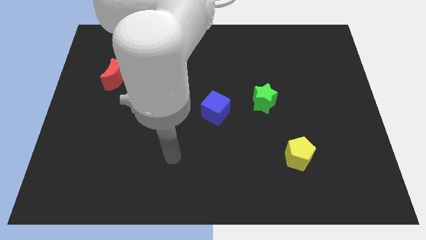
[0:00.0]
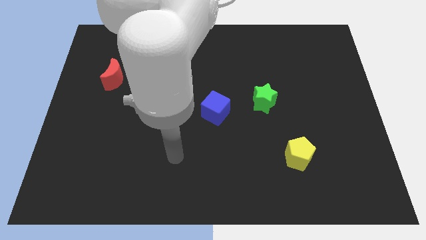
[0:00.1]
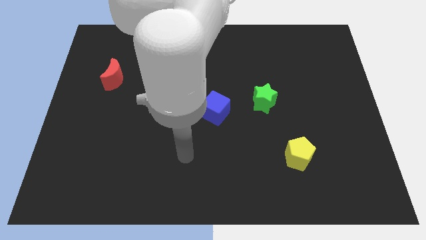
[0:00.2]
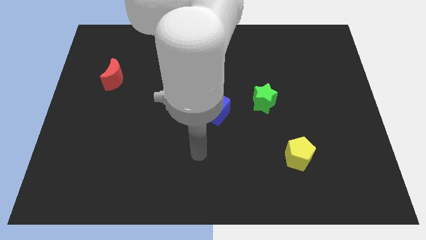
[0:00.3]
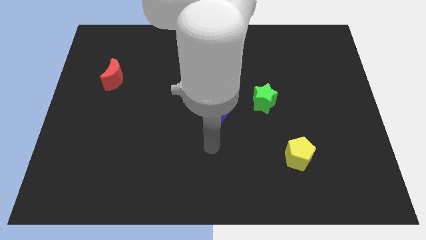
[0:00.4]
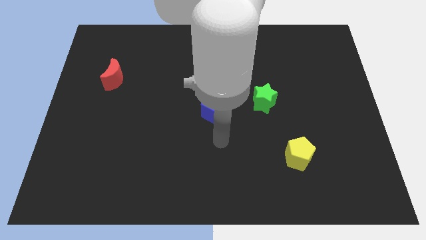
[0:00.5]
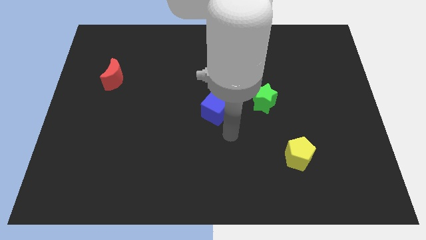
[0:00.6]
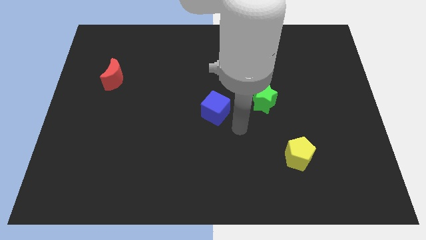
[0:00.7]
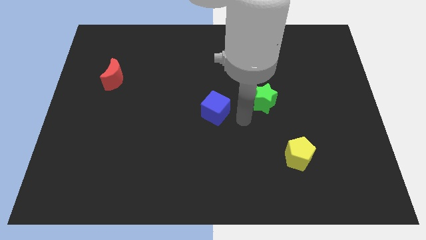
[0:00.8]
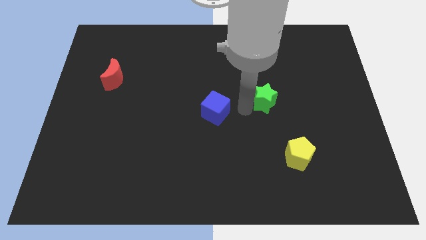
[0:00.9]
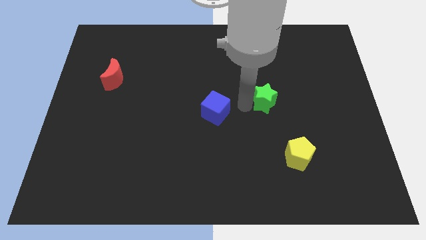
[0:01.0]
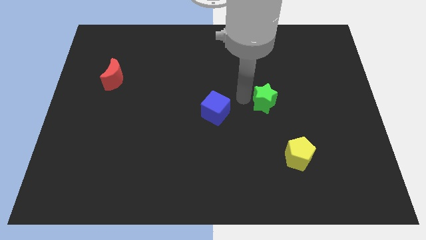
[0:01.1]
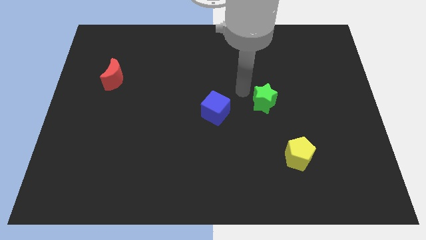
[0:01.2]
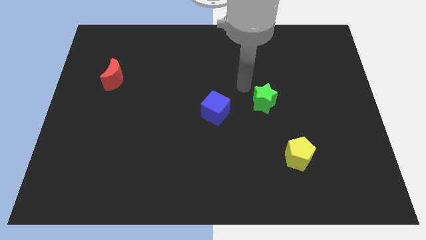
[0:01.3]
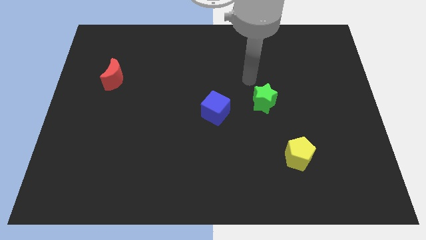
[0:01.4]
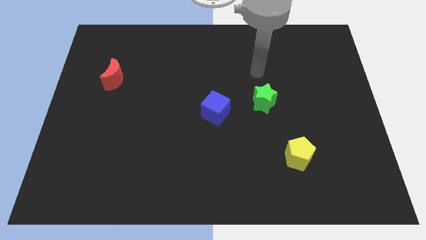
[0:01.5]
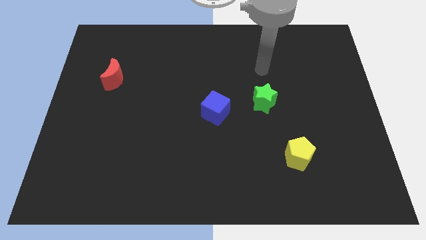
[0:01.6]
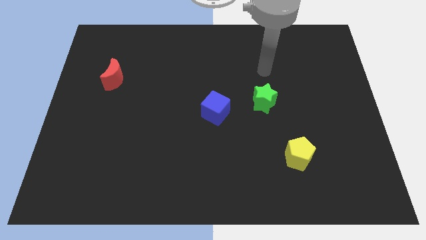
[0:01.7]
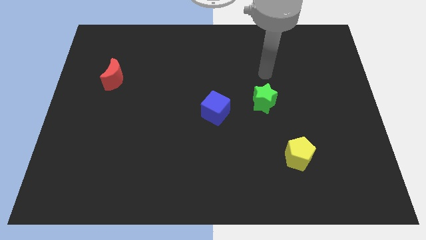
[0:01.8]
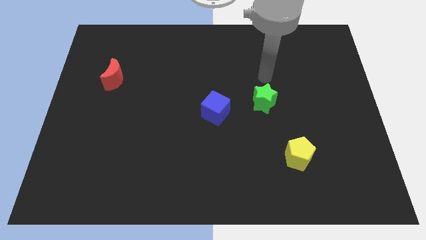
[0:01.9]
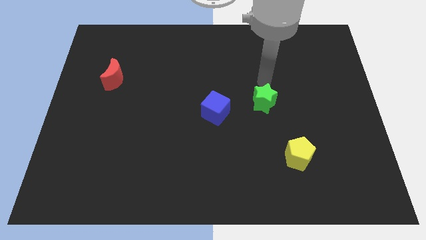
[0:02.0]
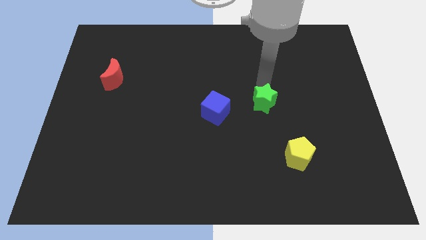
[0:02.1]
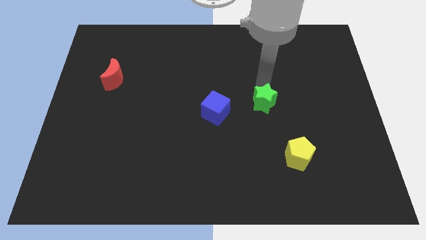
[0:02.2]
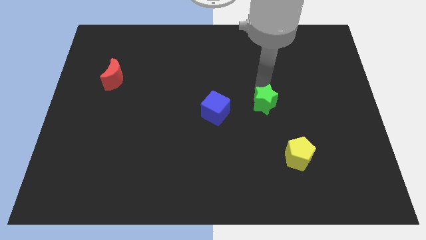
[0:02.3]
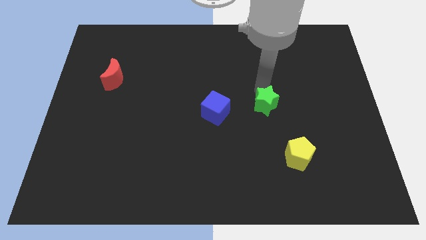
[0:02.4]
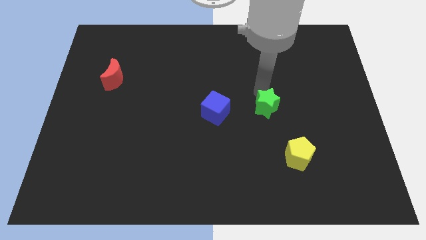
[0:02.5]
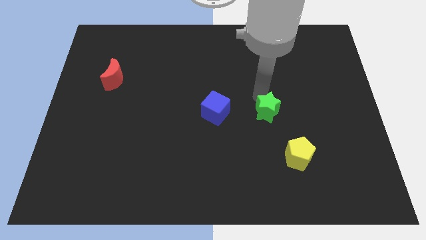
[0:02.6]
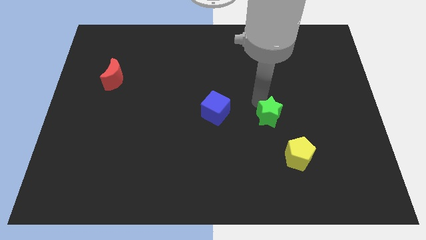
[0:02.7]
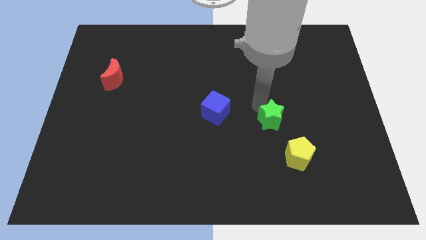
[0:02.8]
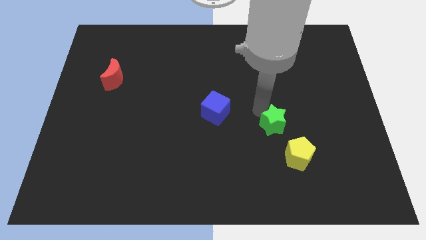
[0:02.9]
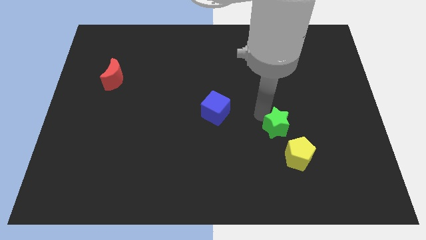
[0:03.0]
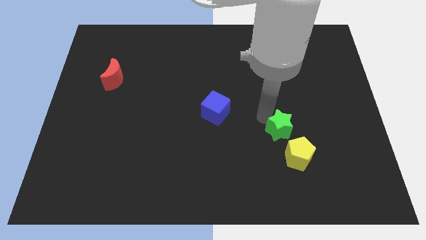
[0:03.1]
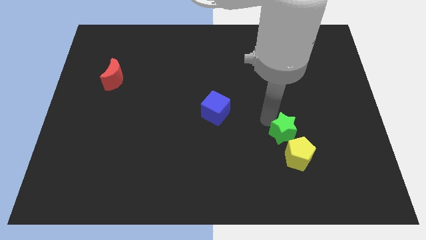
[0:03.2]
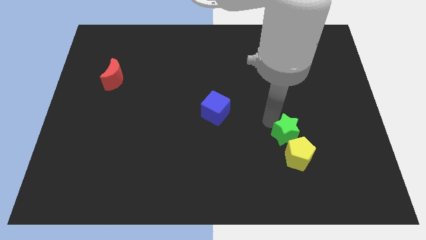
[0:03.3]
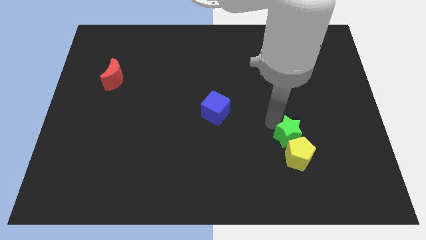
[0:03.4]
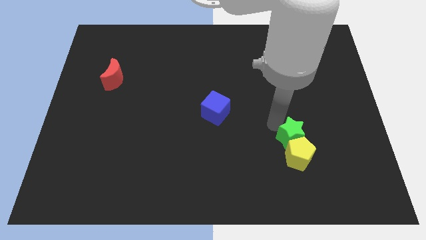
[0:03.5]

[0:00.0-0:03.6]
slide the green star to the yellow pentagon

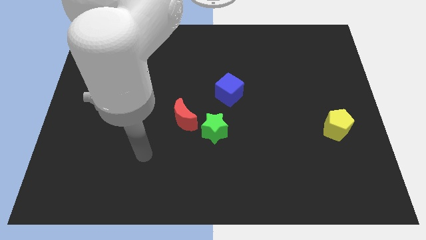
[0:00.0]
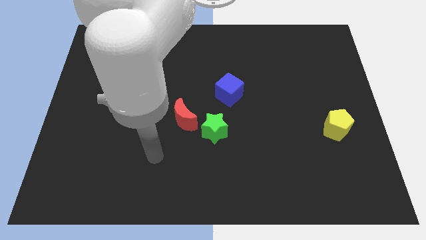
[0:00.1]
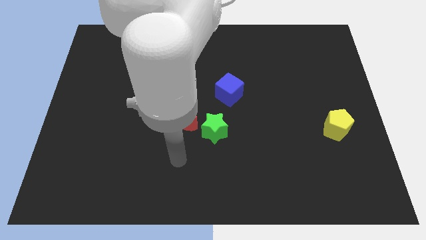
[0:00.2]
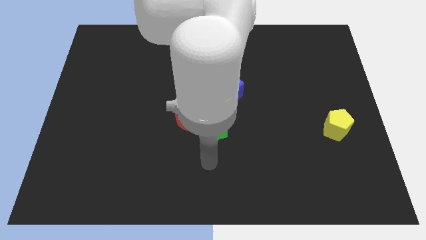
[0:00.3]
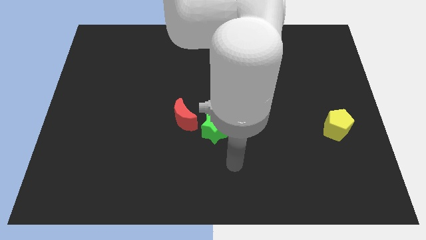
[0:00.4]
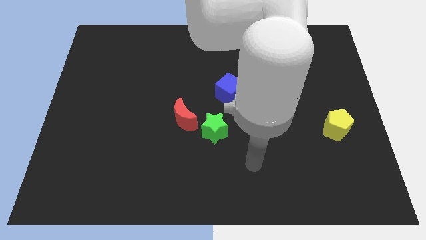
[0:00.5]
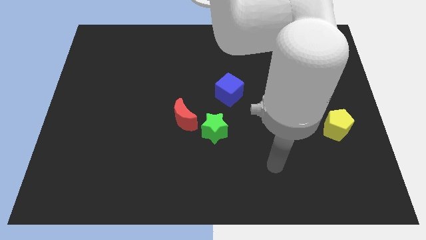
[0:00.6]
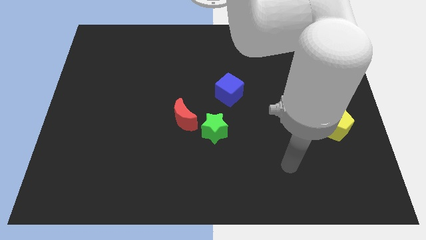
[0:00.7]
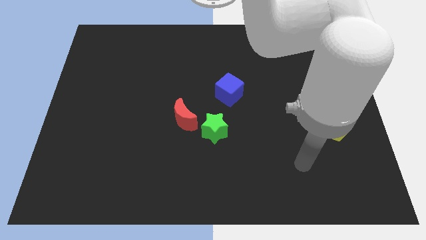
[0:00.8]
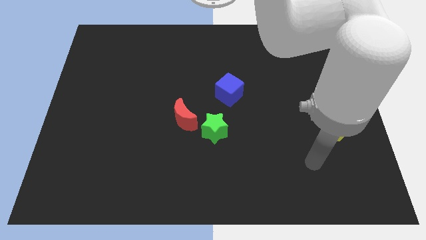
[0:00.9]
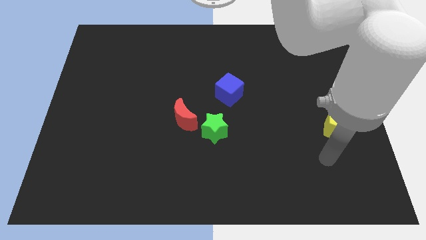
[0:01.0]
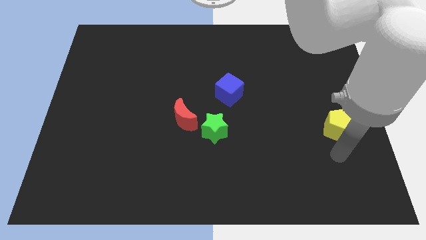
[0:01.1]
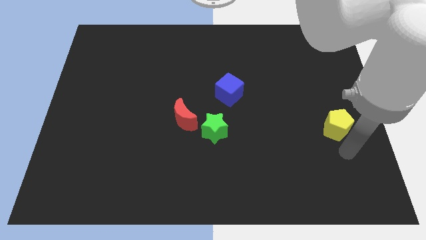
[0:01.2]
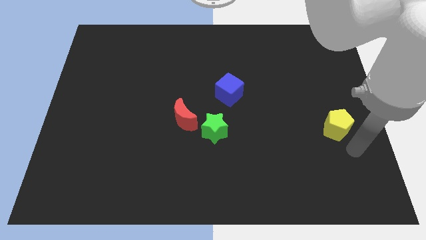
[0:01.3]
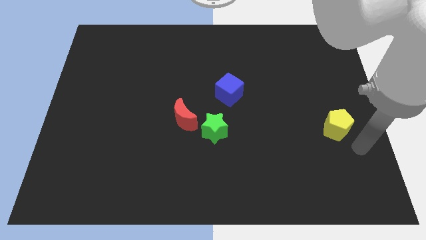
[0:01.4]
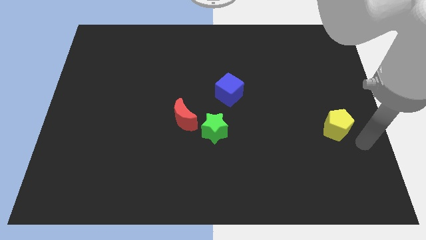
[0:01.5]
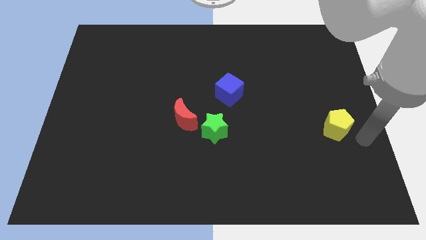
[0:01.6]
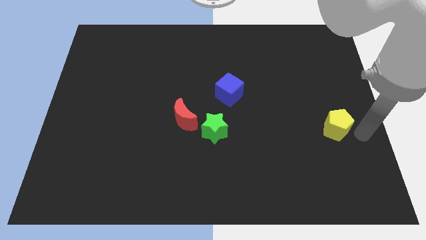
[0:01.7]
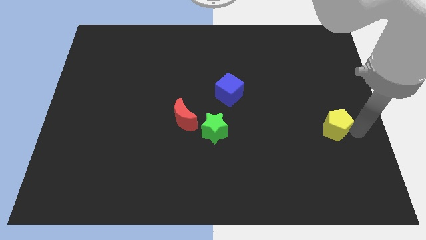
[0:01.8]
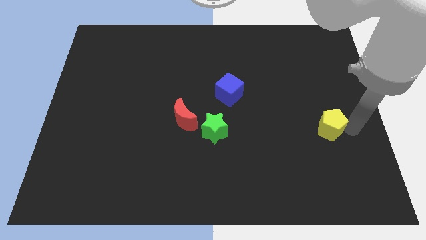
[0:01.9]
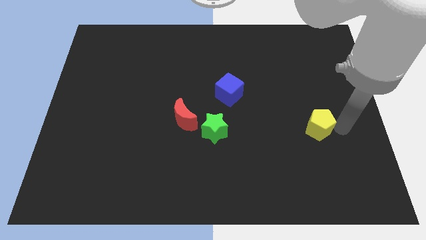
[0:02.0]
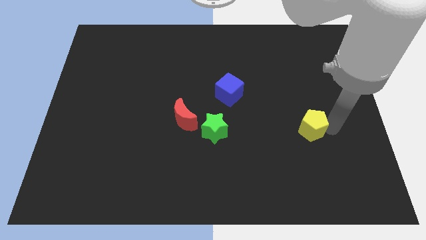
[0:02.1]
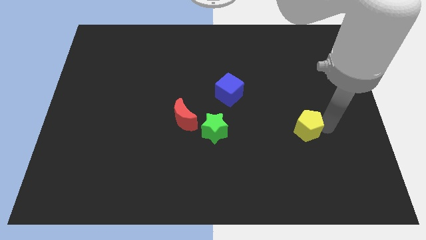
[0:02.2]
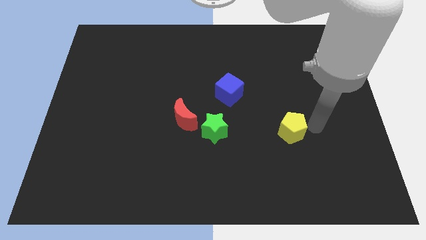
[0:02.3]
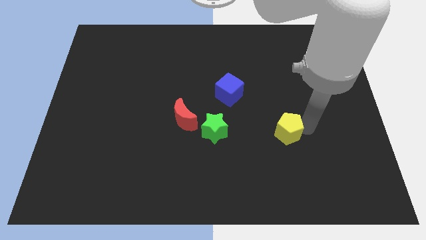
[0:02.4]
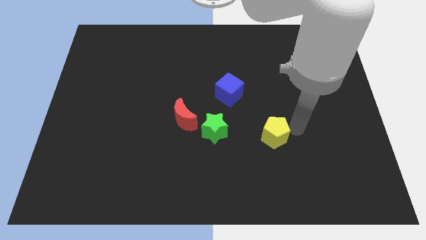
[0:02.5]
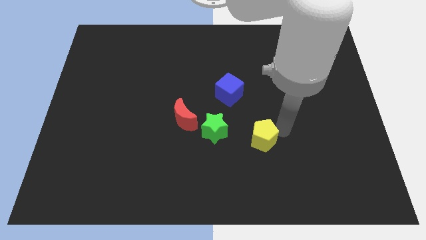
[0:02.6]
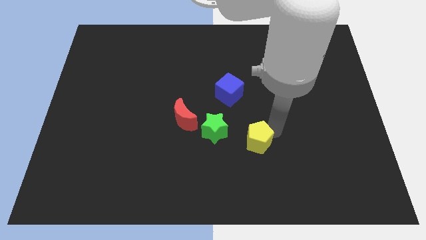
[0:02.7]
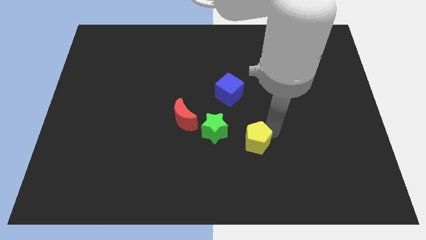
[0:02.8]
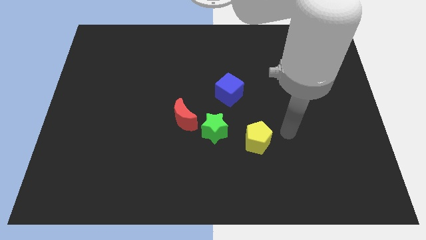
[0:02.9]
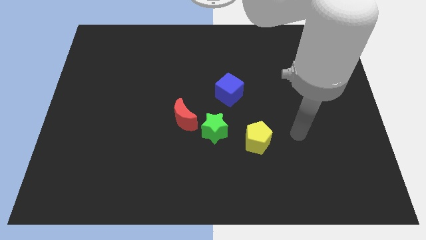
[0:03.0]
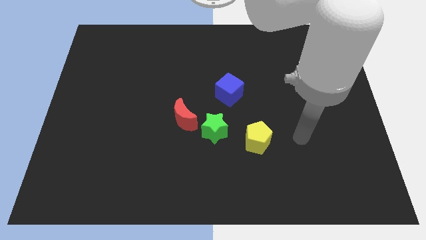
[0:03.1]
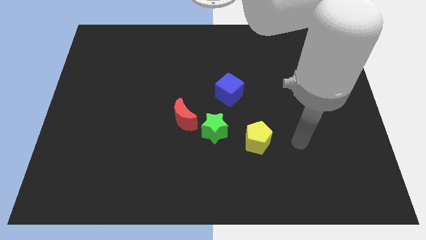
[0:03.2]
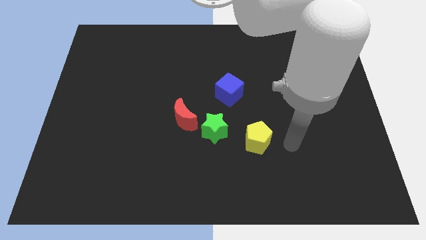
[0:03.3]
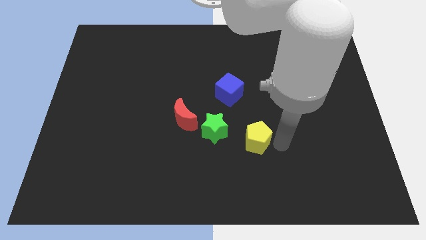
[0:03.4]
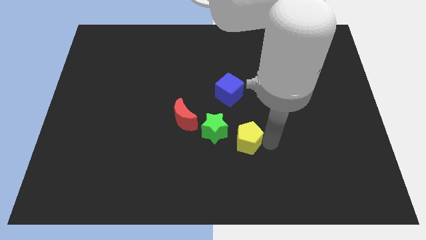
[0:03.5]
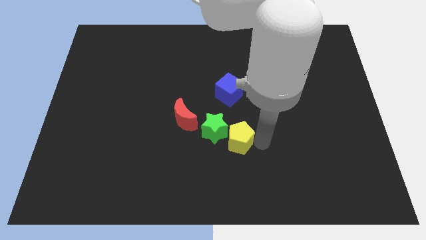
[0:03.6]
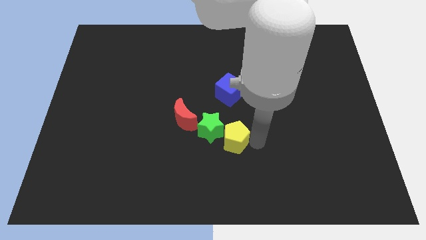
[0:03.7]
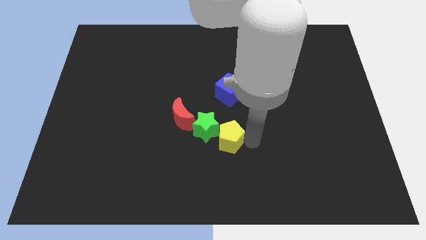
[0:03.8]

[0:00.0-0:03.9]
put the yellow pentagon close to the green block

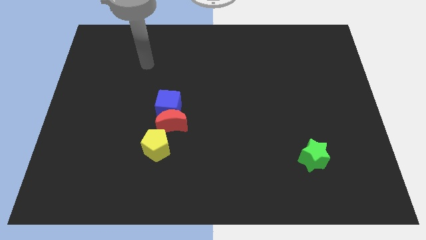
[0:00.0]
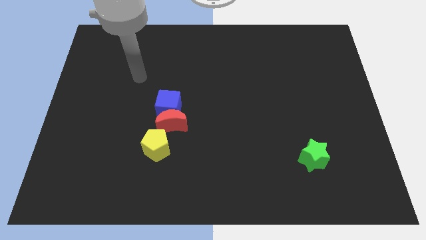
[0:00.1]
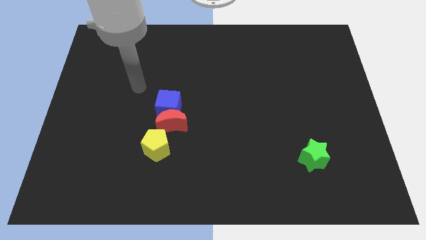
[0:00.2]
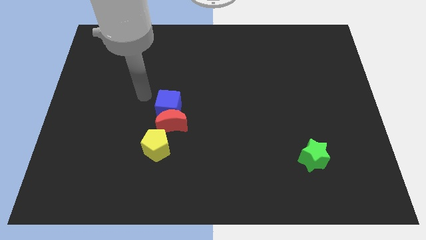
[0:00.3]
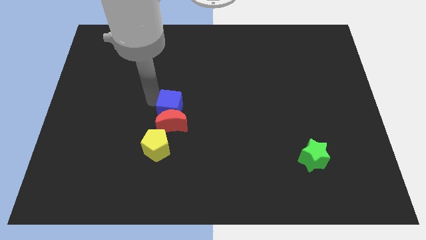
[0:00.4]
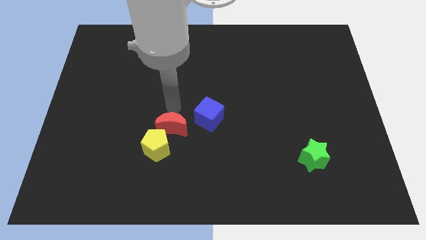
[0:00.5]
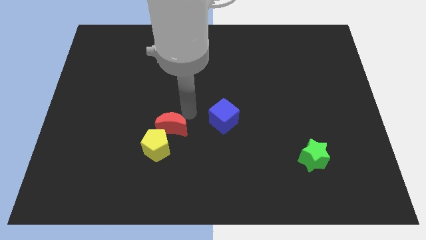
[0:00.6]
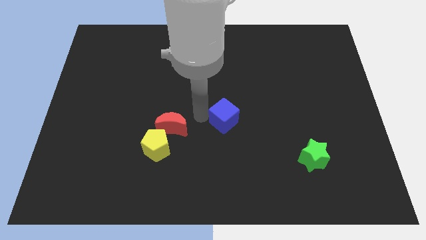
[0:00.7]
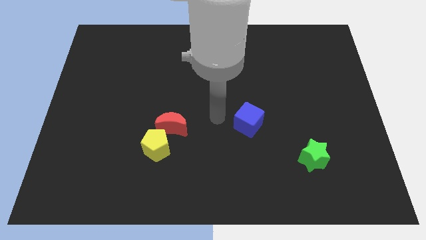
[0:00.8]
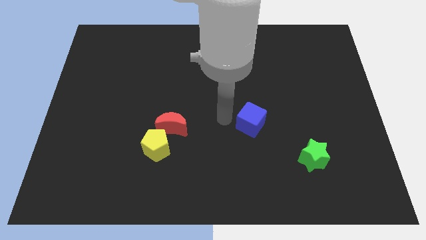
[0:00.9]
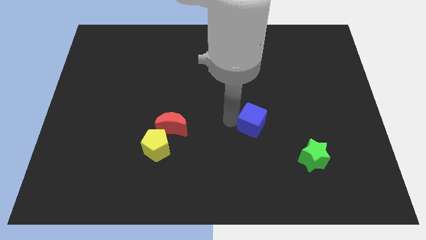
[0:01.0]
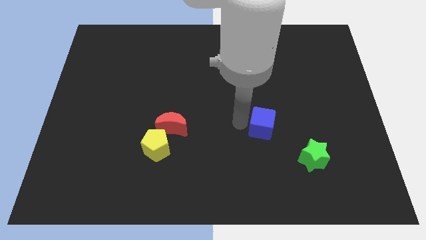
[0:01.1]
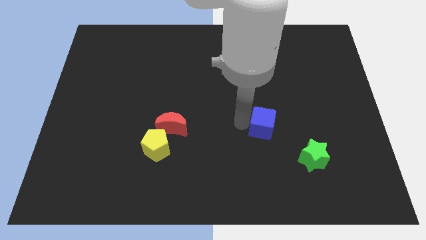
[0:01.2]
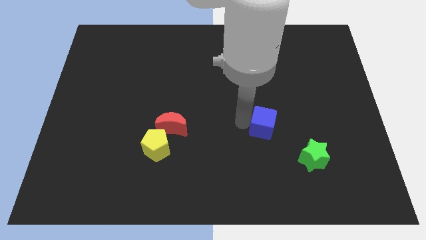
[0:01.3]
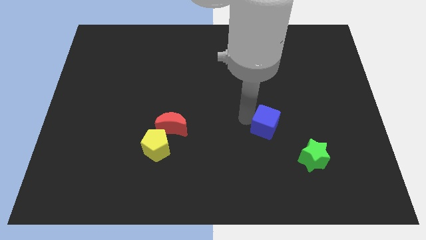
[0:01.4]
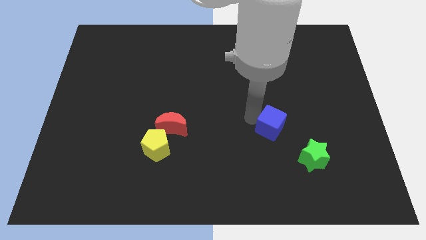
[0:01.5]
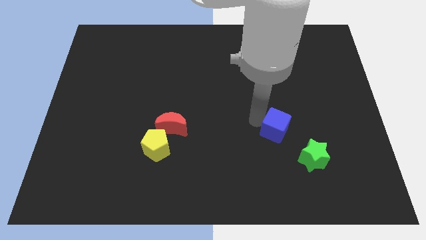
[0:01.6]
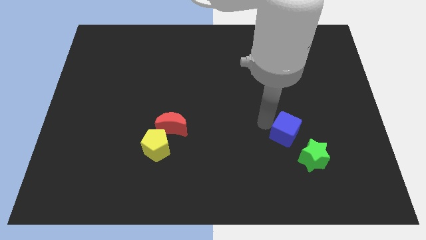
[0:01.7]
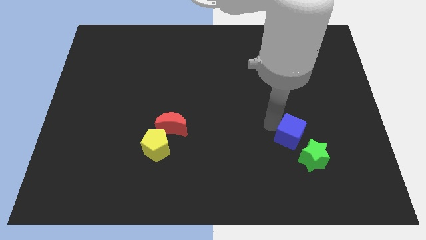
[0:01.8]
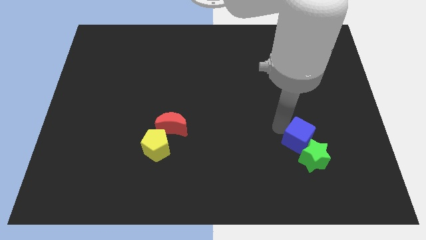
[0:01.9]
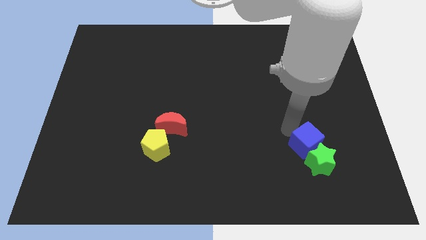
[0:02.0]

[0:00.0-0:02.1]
put the blue cube close to the star
